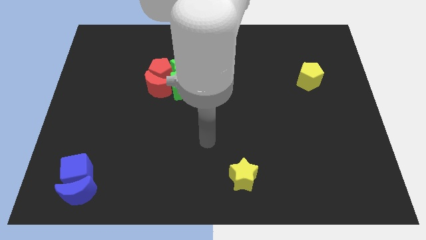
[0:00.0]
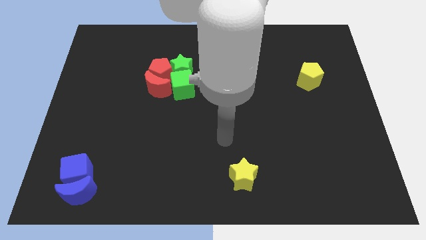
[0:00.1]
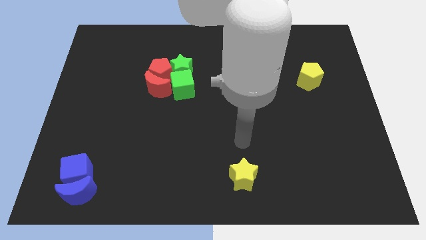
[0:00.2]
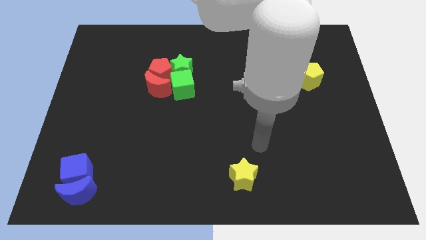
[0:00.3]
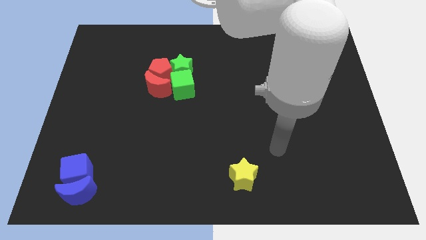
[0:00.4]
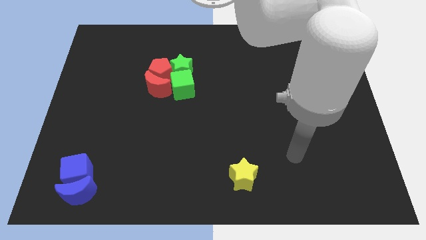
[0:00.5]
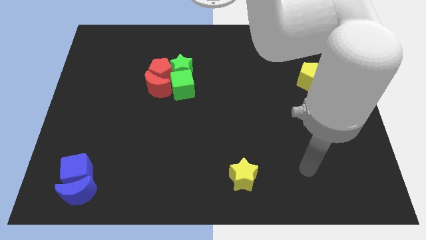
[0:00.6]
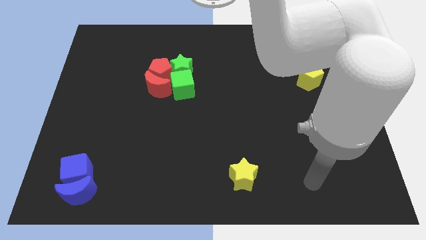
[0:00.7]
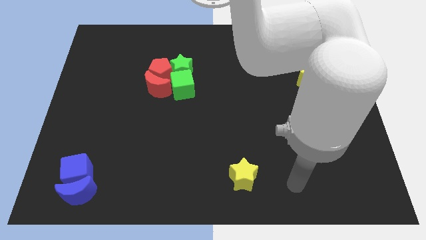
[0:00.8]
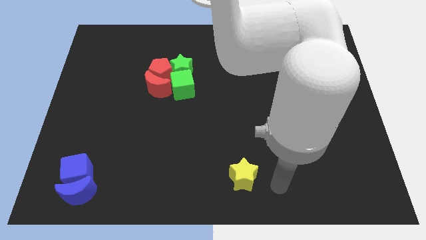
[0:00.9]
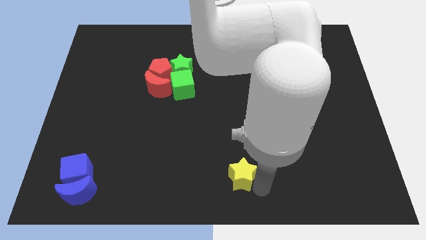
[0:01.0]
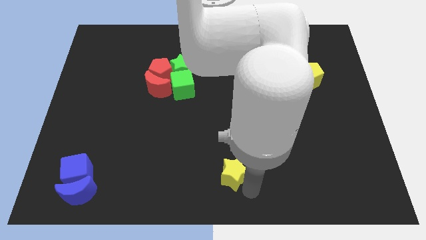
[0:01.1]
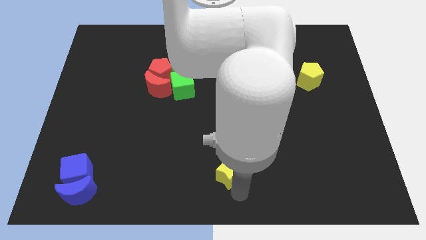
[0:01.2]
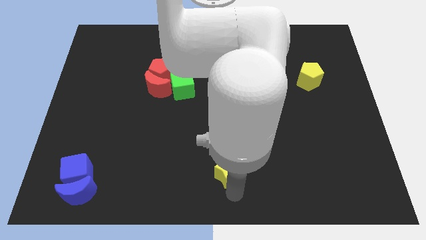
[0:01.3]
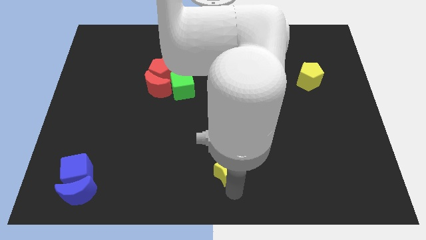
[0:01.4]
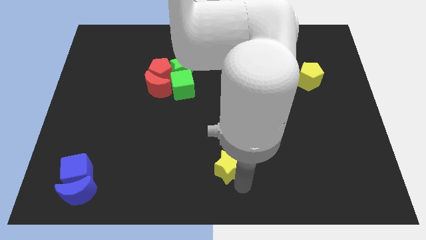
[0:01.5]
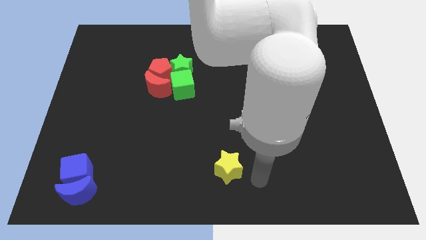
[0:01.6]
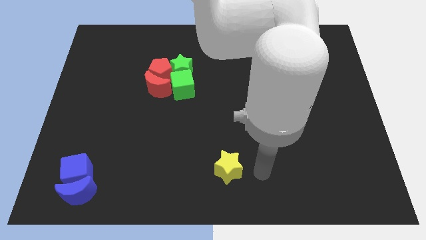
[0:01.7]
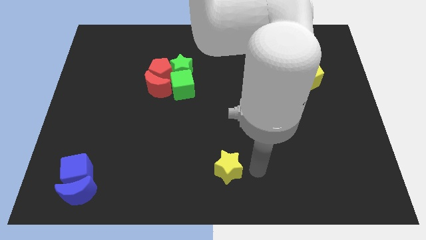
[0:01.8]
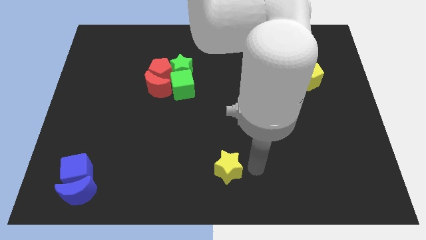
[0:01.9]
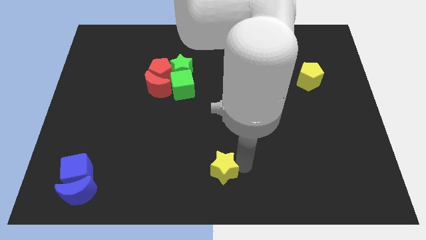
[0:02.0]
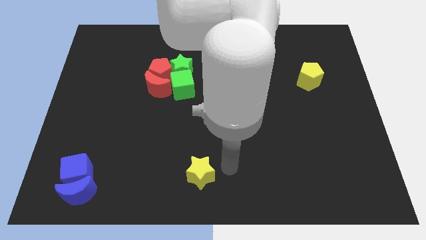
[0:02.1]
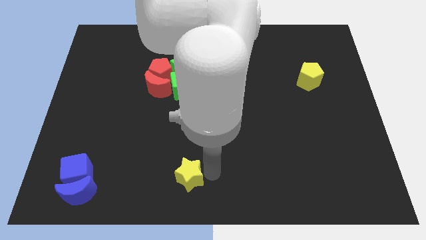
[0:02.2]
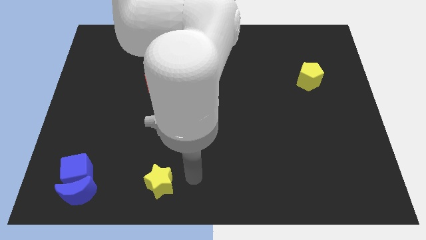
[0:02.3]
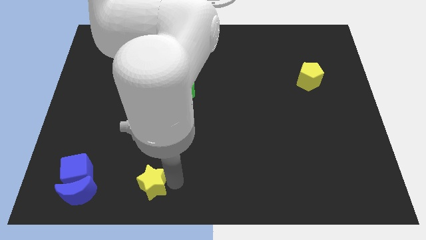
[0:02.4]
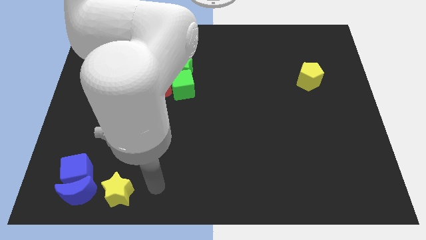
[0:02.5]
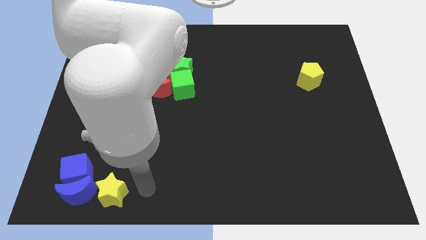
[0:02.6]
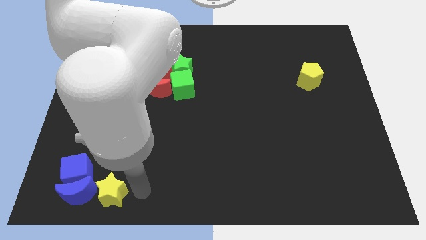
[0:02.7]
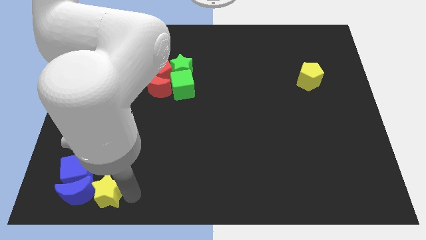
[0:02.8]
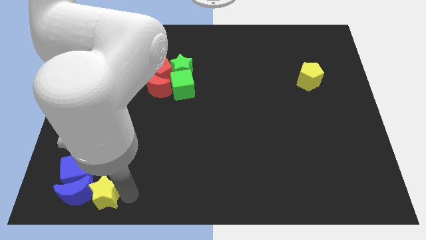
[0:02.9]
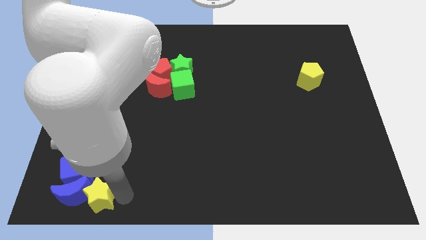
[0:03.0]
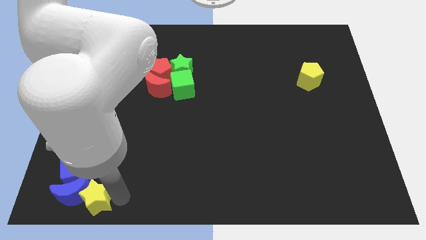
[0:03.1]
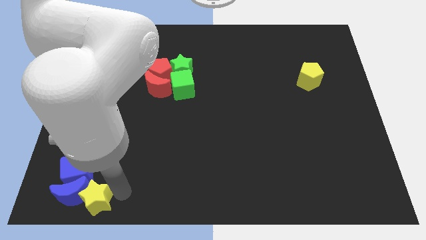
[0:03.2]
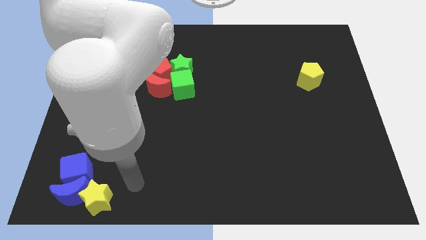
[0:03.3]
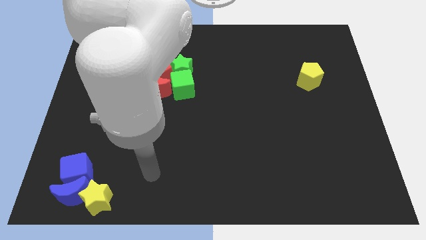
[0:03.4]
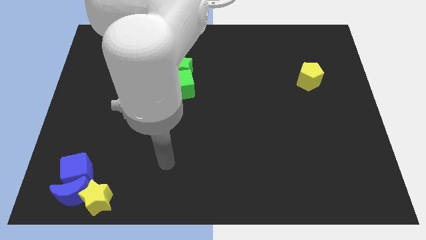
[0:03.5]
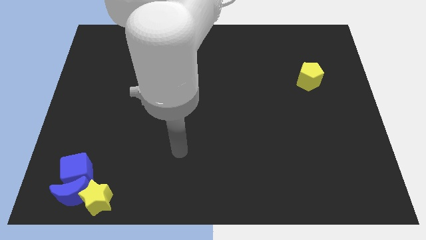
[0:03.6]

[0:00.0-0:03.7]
push the yellow star into blue moon

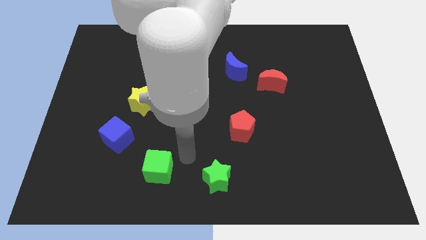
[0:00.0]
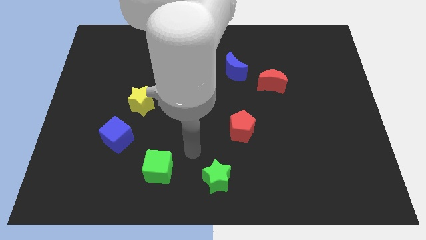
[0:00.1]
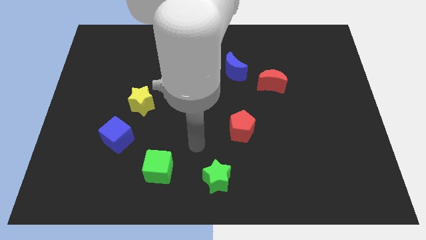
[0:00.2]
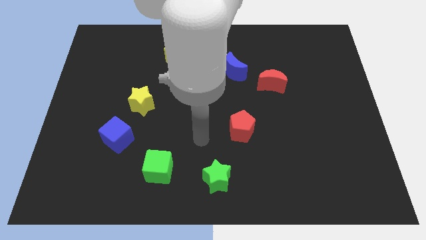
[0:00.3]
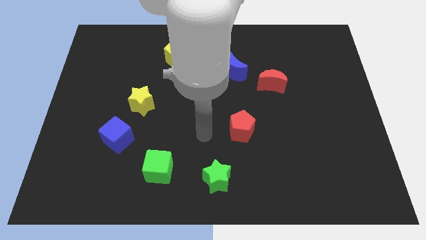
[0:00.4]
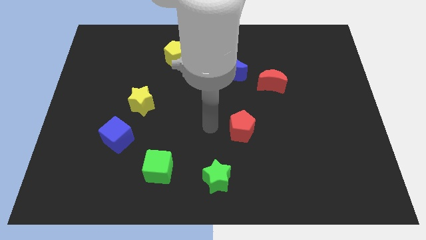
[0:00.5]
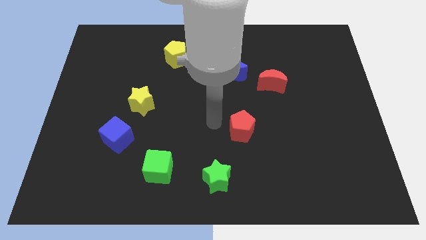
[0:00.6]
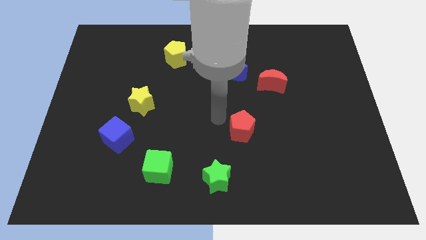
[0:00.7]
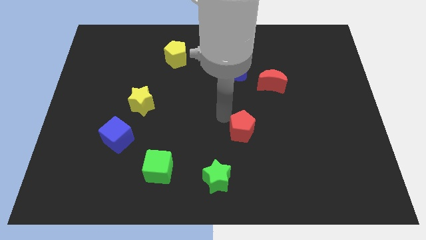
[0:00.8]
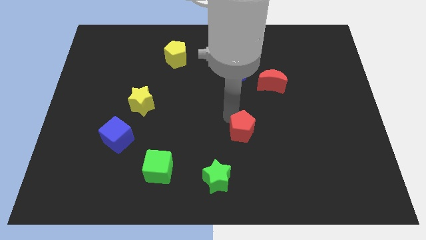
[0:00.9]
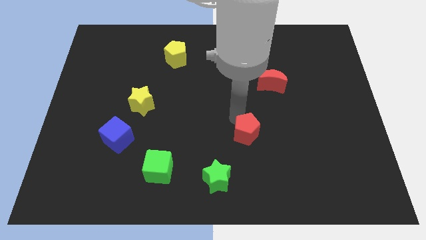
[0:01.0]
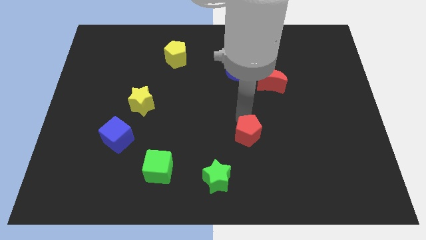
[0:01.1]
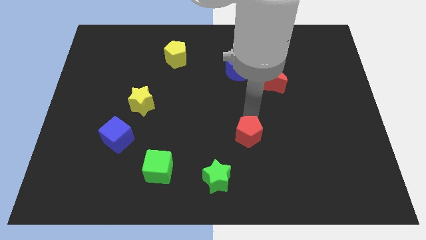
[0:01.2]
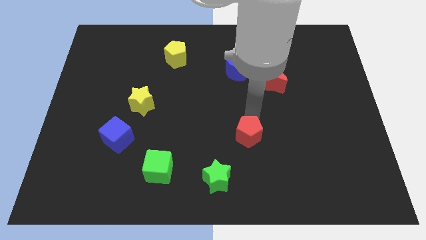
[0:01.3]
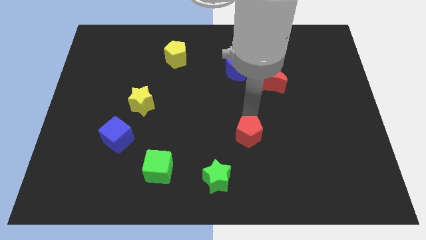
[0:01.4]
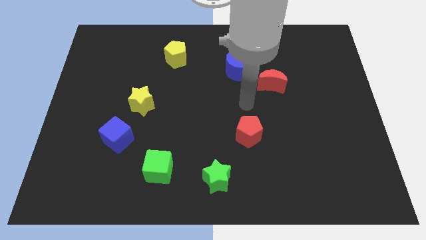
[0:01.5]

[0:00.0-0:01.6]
slightly move the red pentagon to the right of the board

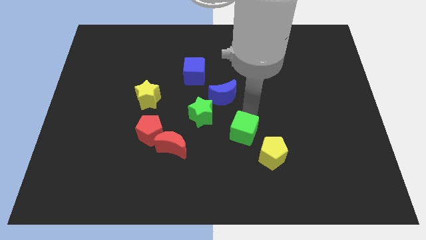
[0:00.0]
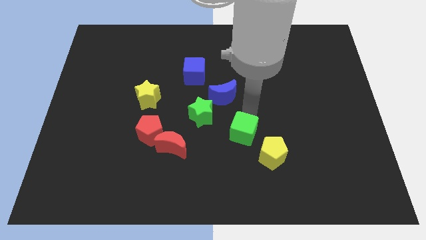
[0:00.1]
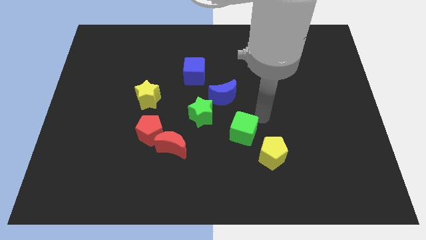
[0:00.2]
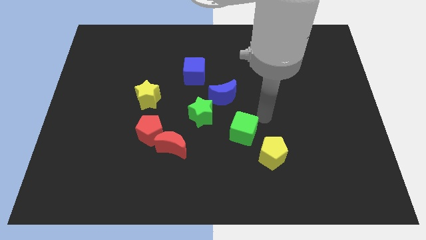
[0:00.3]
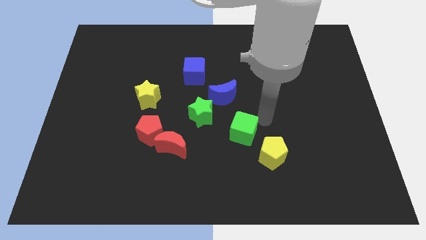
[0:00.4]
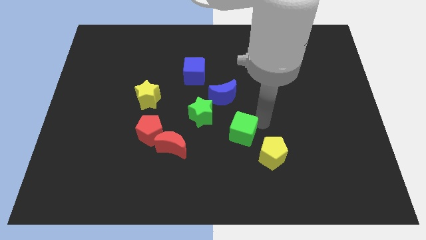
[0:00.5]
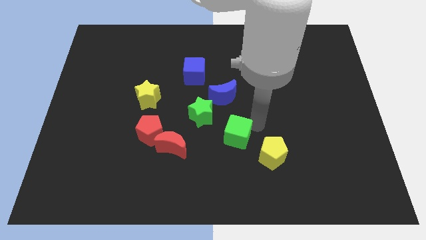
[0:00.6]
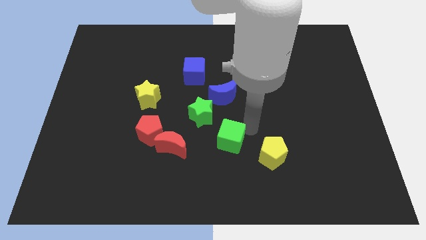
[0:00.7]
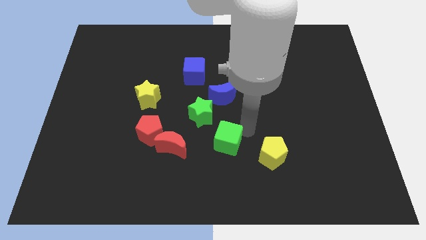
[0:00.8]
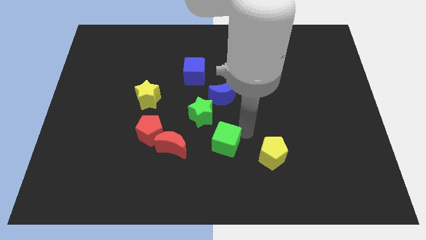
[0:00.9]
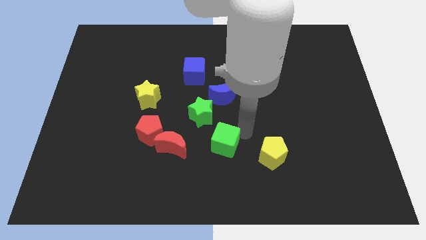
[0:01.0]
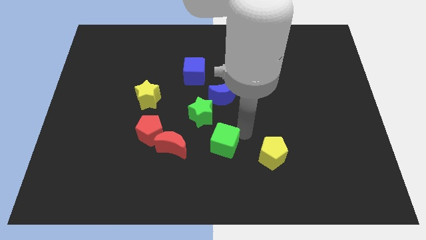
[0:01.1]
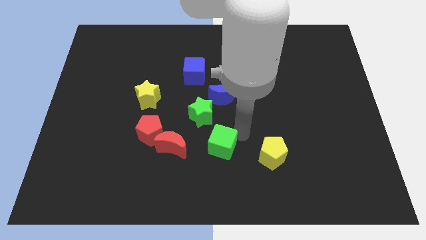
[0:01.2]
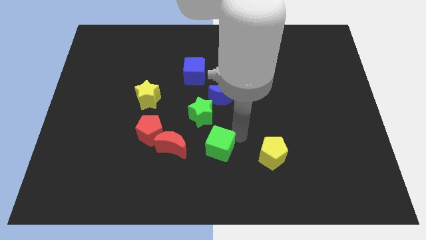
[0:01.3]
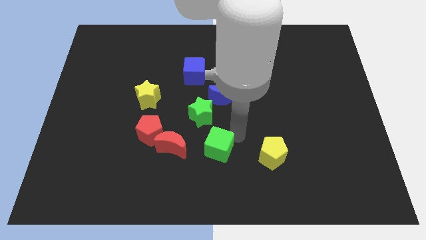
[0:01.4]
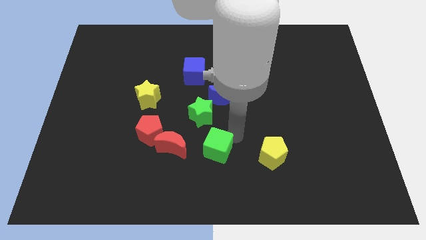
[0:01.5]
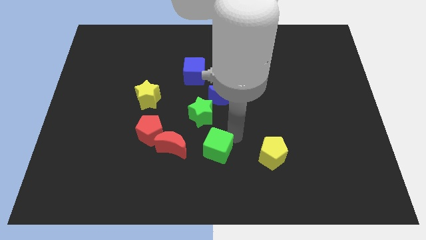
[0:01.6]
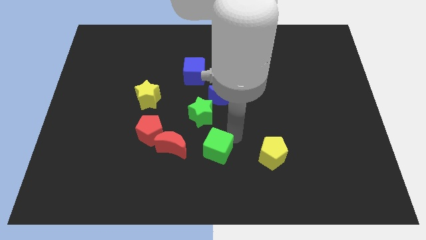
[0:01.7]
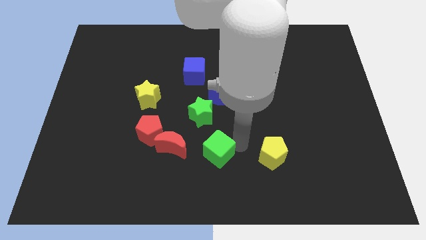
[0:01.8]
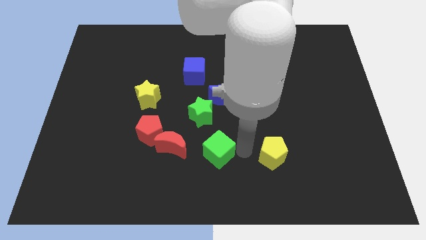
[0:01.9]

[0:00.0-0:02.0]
push the green cube to the right of the red crescent

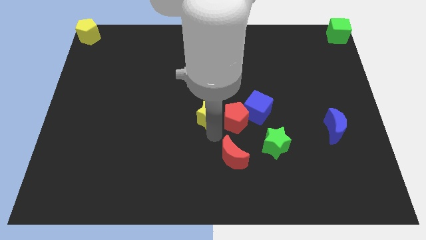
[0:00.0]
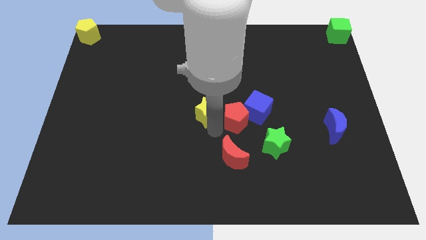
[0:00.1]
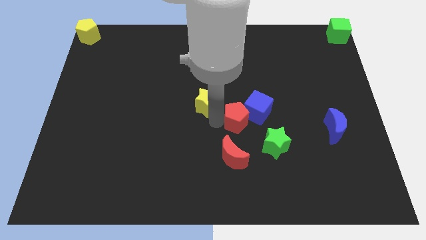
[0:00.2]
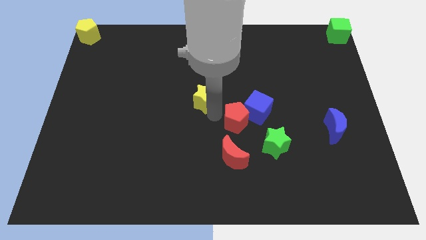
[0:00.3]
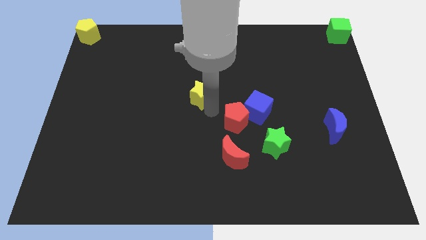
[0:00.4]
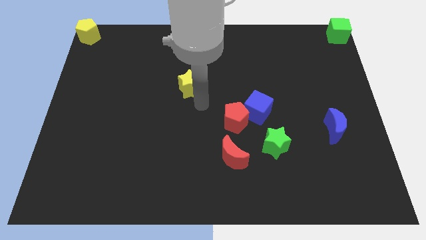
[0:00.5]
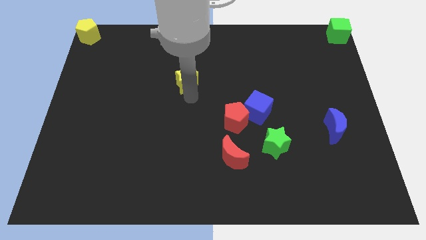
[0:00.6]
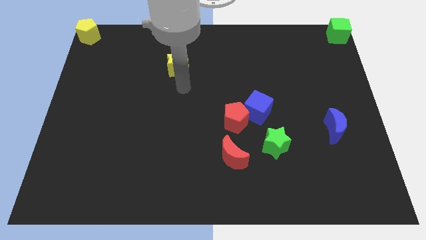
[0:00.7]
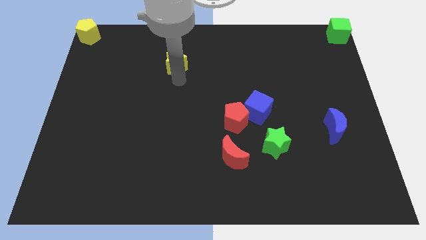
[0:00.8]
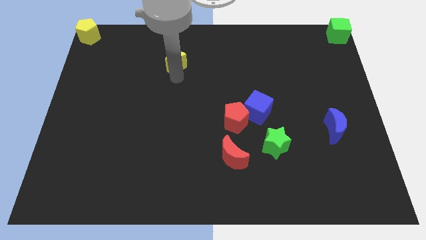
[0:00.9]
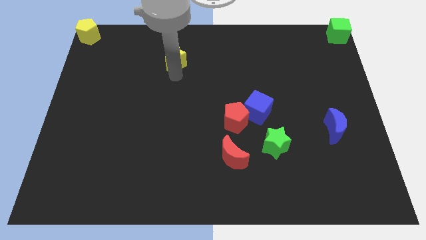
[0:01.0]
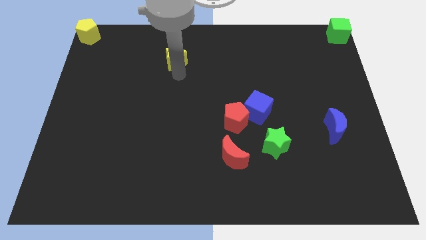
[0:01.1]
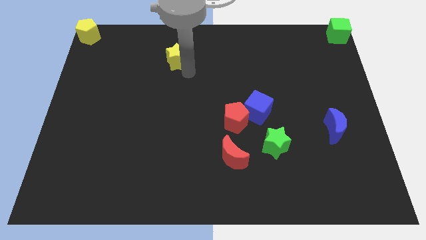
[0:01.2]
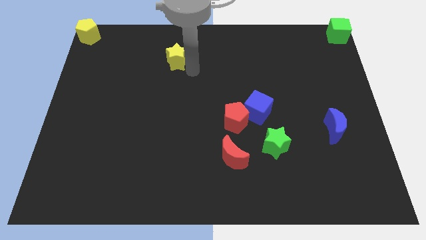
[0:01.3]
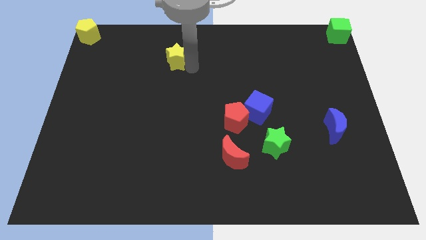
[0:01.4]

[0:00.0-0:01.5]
slide the yellow star diagonally on the bottom right side of the yellow pentagon

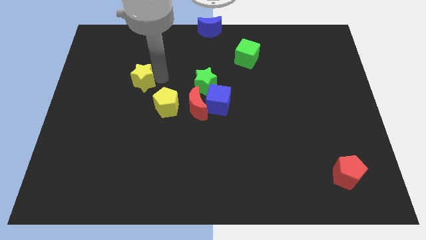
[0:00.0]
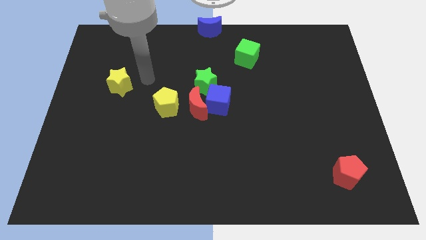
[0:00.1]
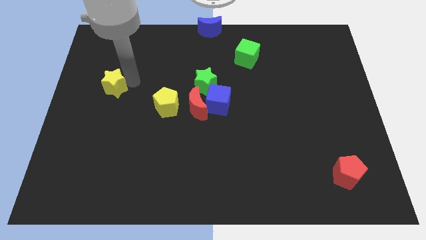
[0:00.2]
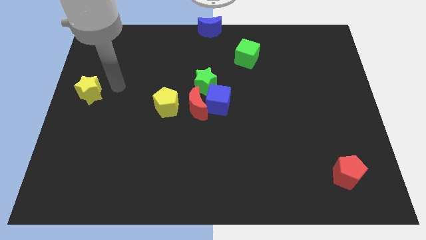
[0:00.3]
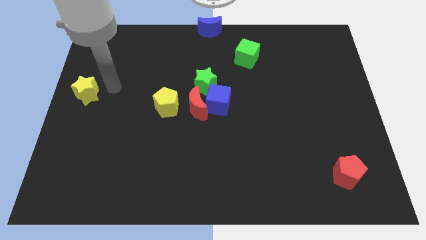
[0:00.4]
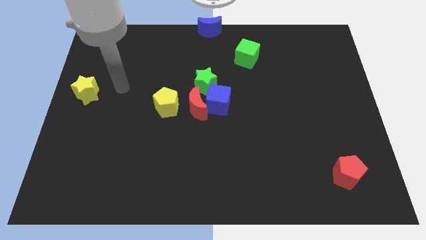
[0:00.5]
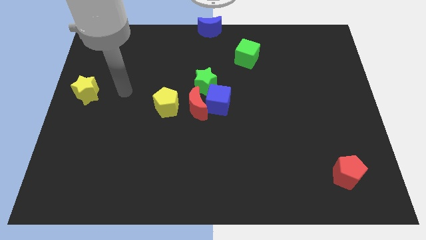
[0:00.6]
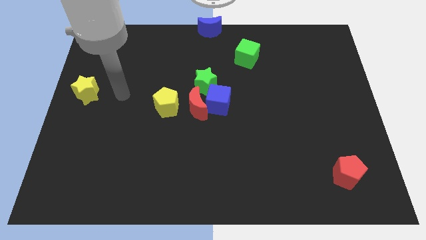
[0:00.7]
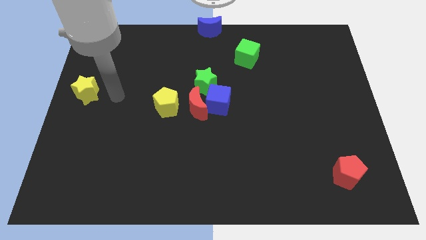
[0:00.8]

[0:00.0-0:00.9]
place the yellow star to the left center of the board
